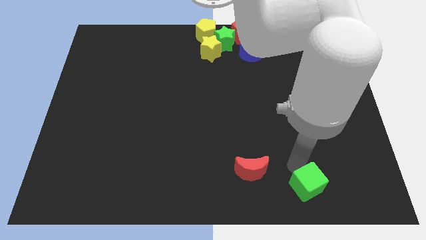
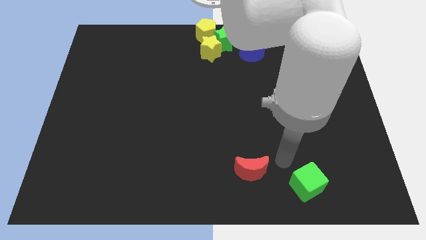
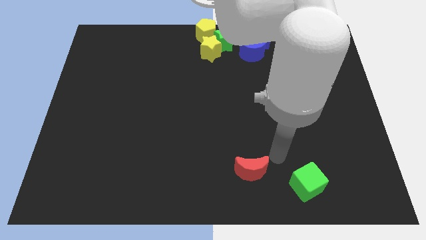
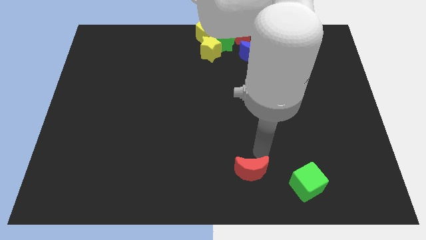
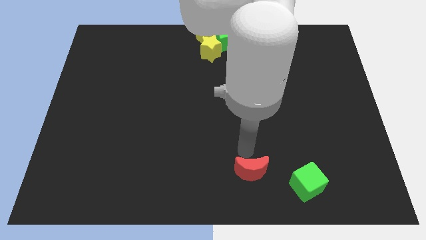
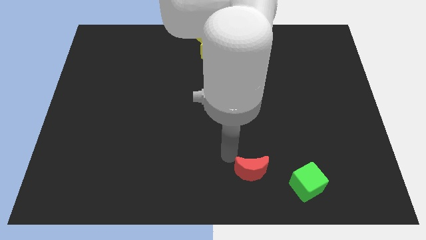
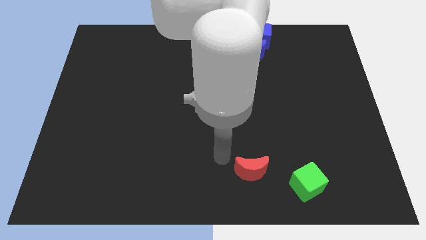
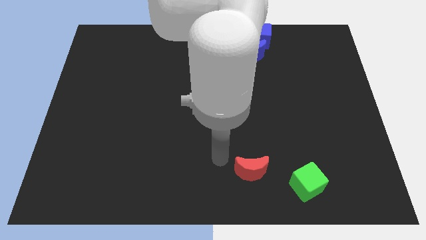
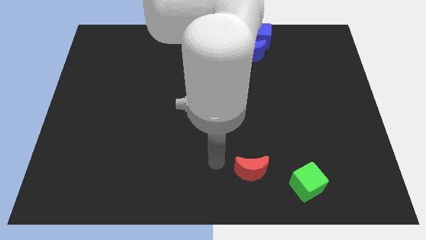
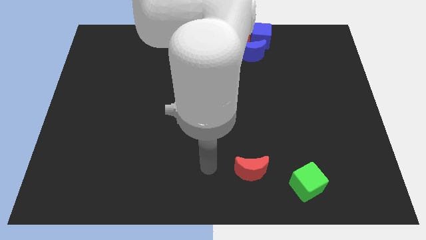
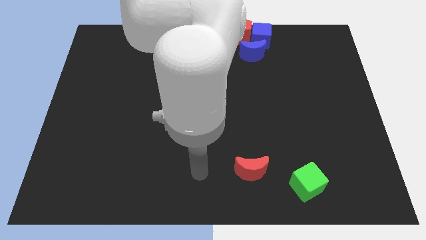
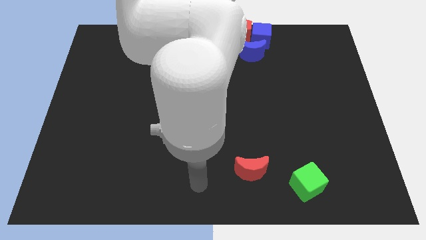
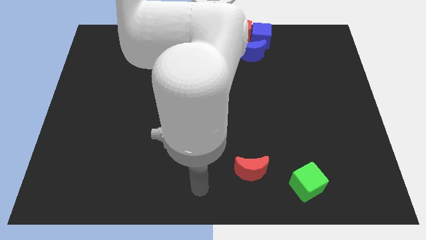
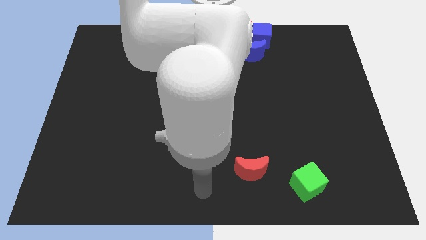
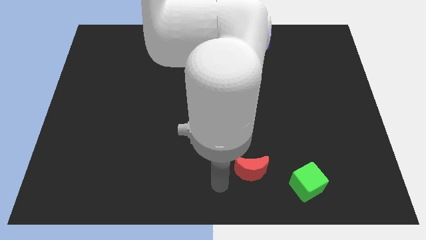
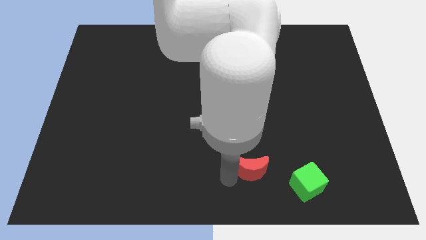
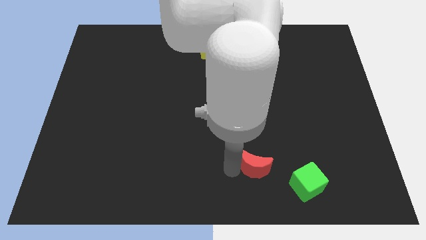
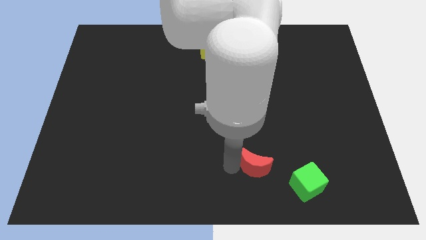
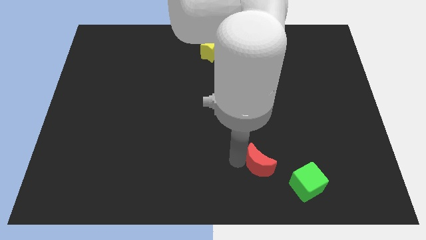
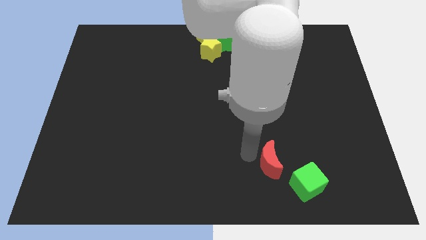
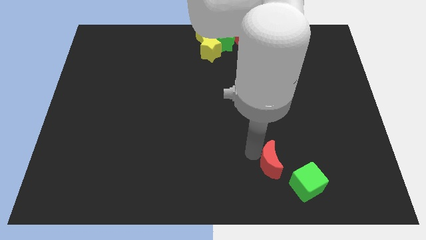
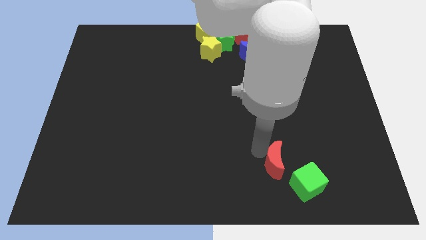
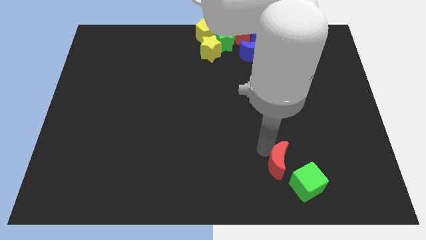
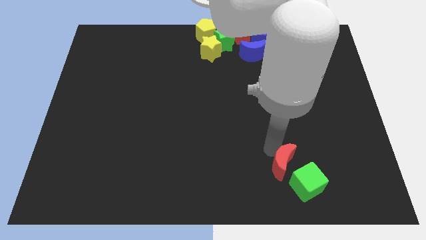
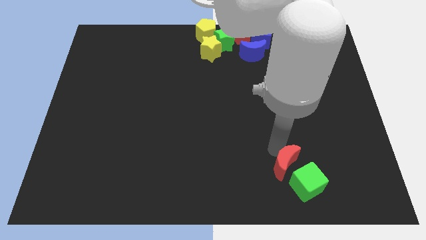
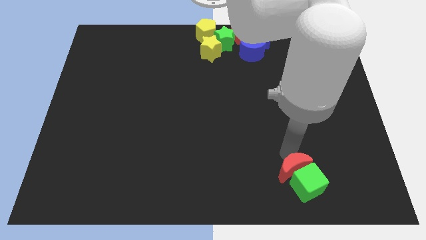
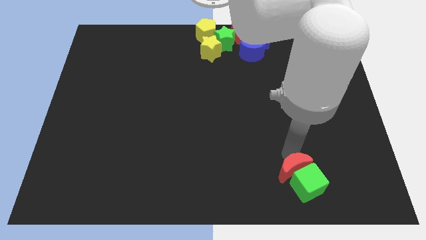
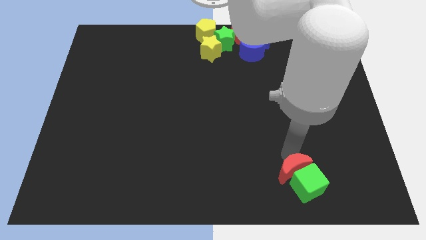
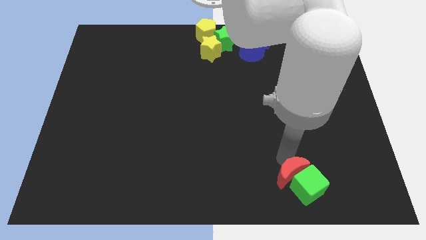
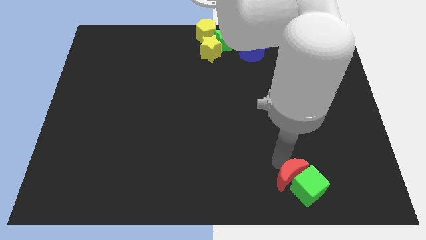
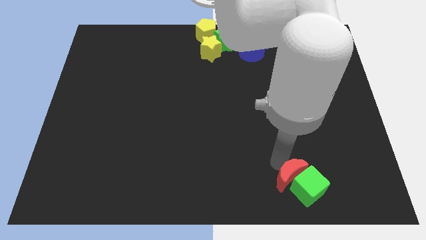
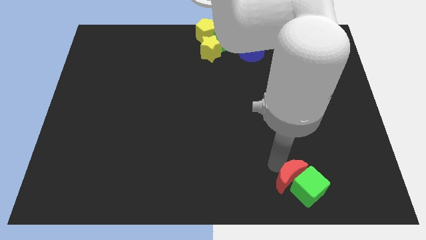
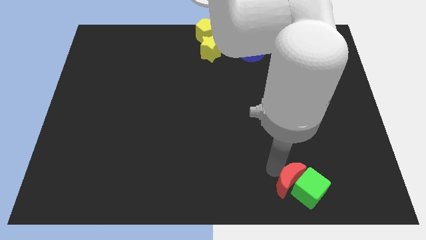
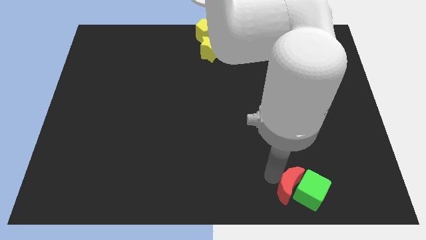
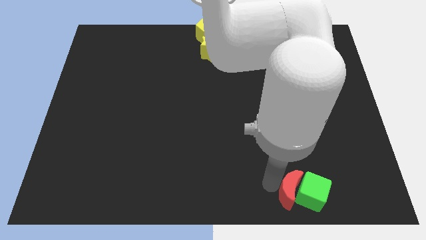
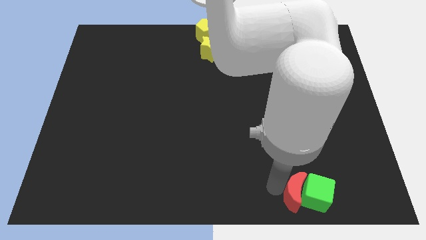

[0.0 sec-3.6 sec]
move the red moon on to the top of green cube

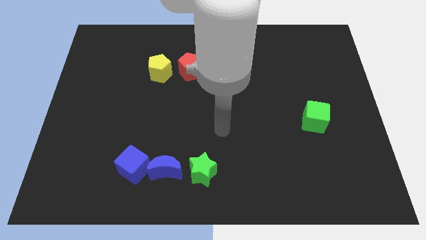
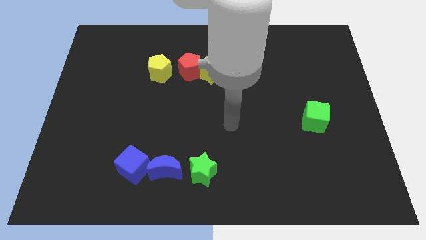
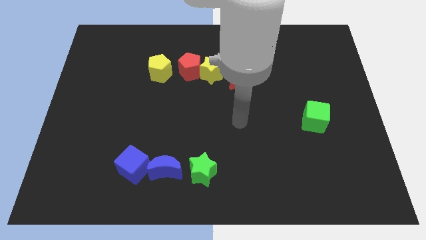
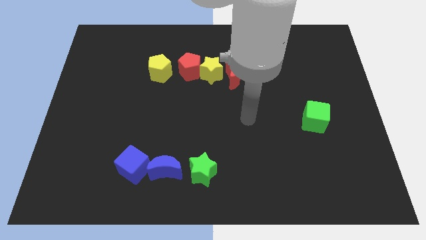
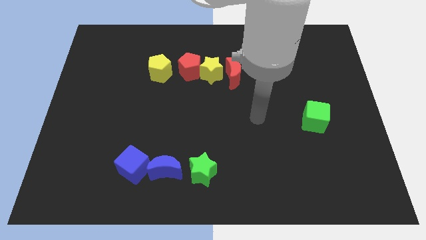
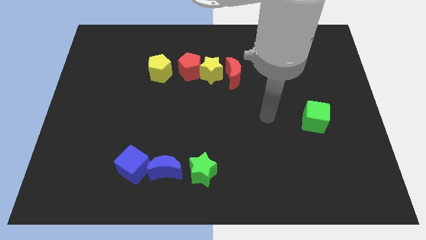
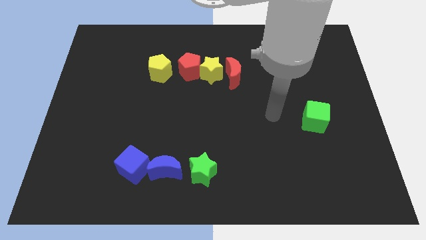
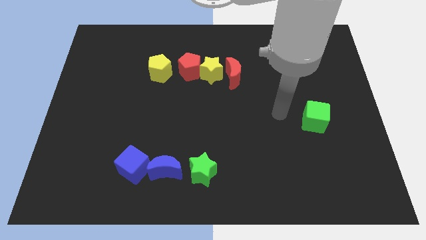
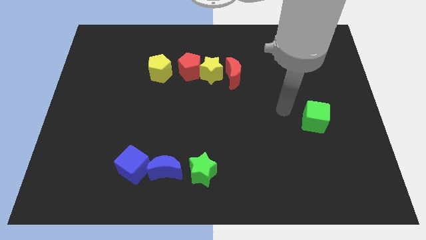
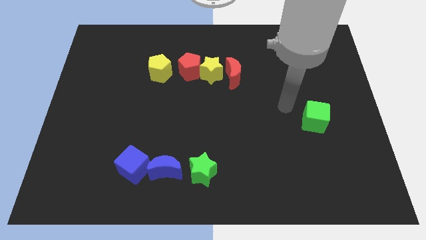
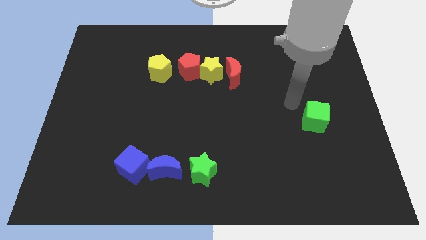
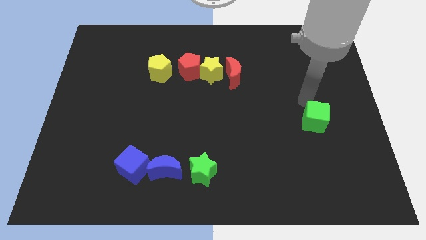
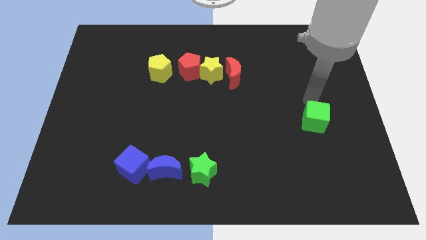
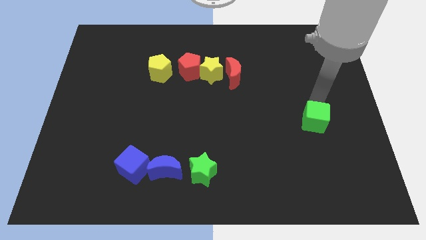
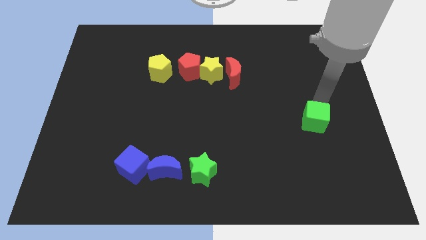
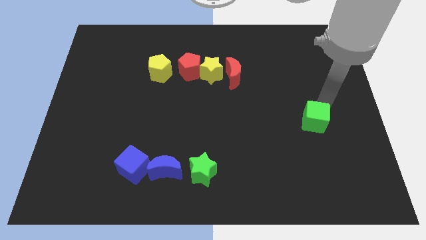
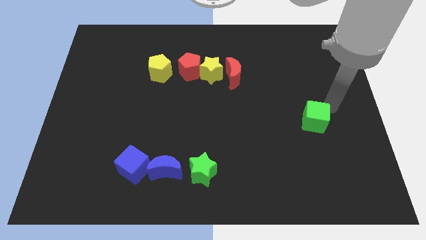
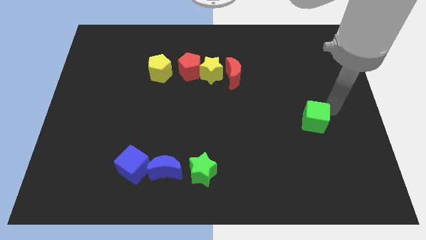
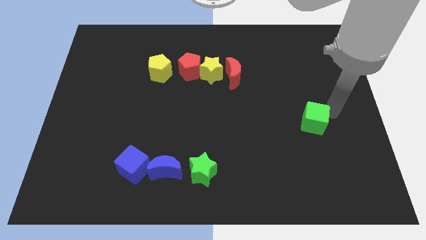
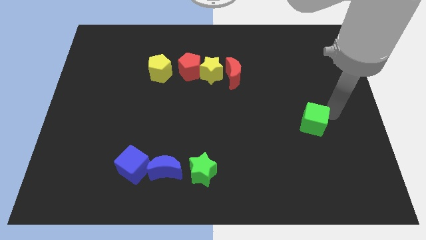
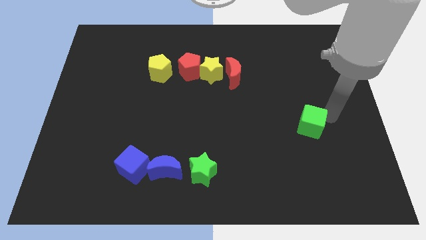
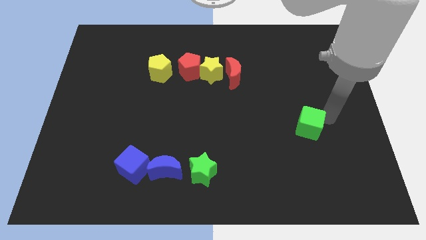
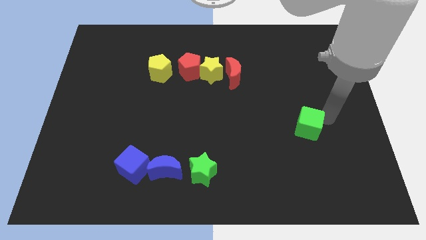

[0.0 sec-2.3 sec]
move the arm into the green cube

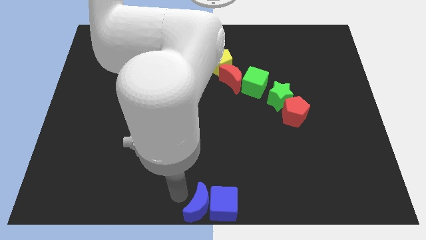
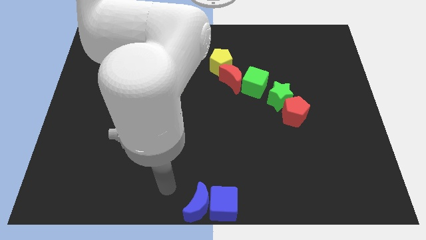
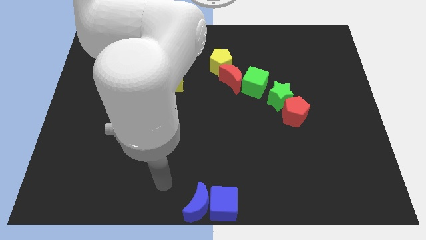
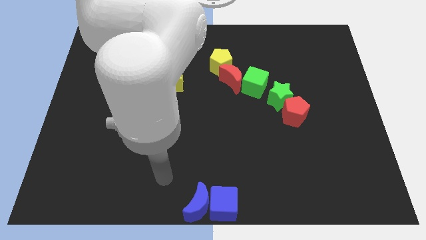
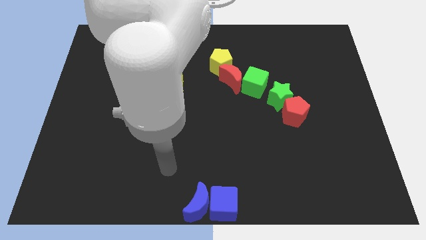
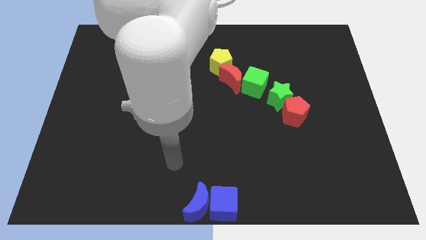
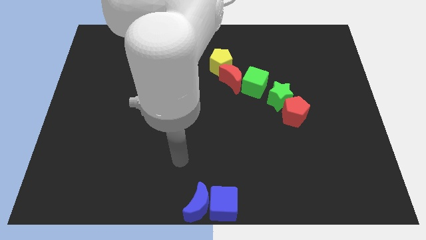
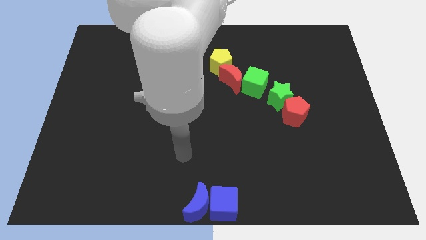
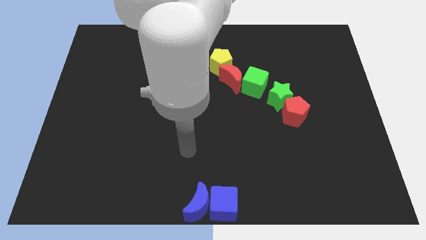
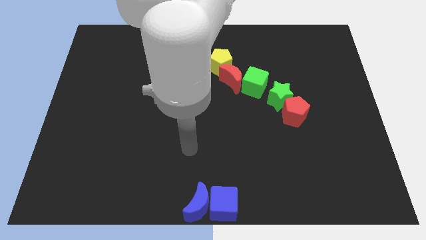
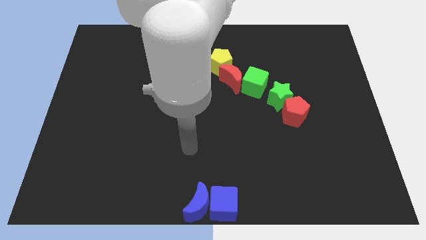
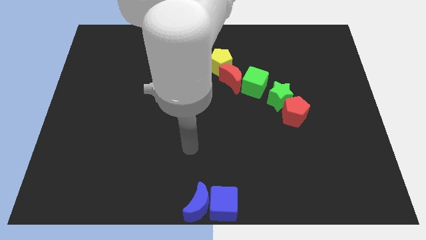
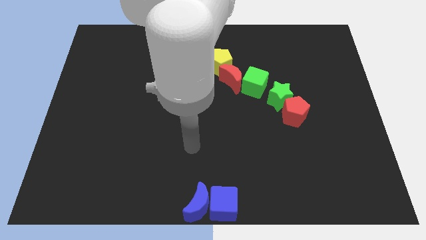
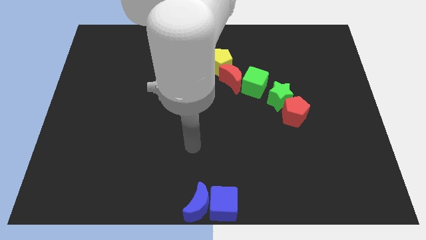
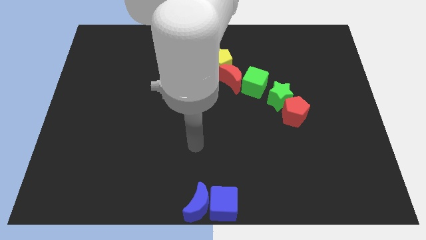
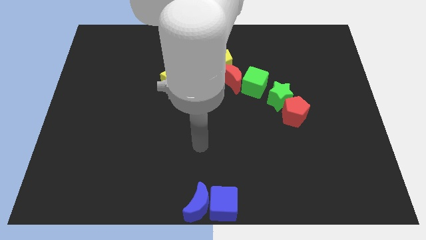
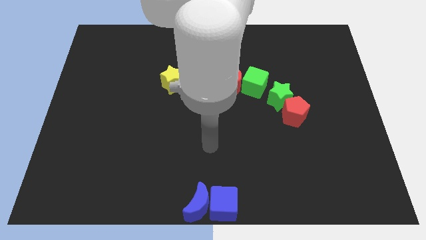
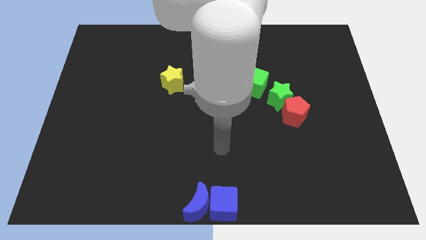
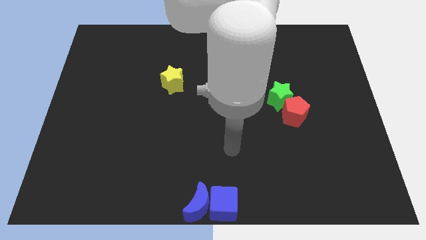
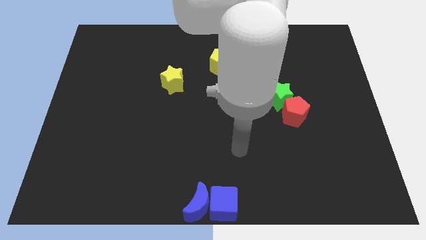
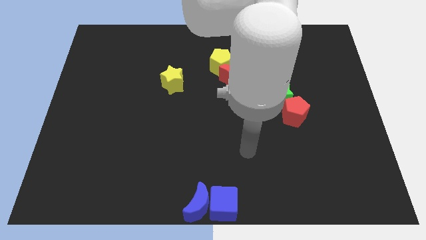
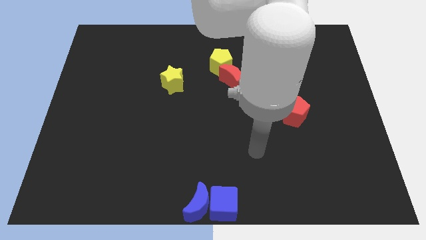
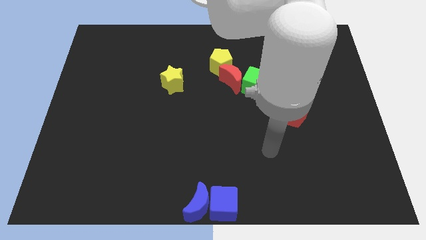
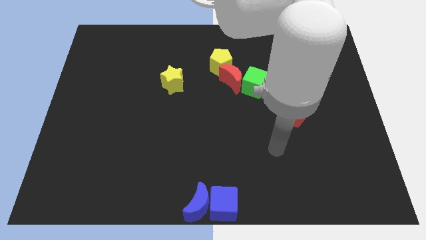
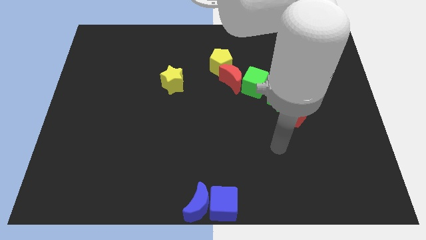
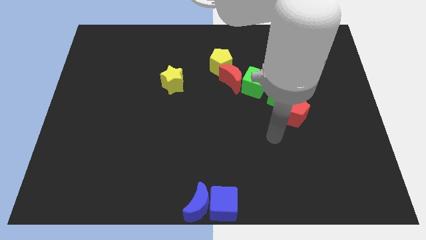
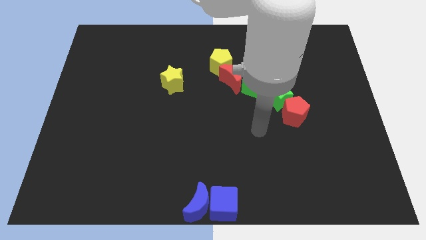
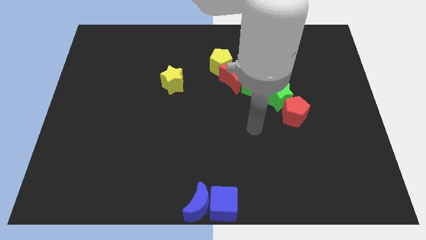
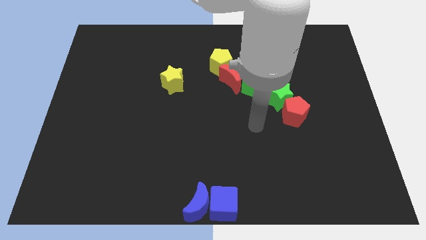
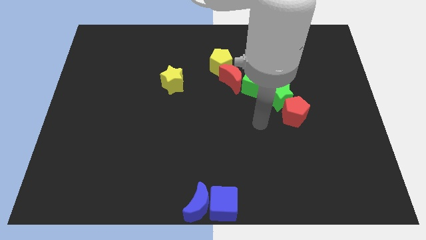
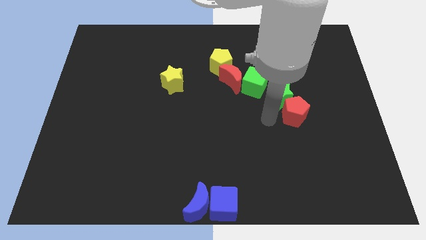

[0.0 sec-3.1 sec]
move your arm away from the blue moon
